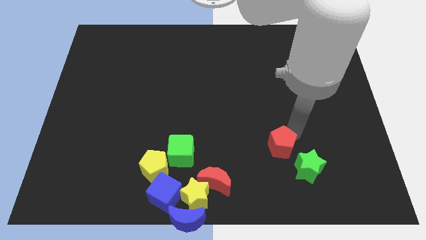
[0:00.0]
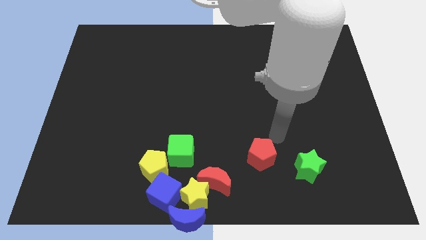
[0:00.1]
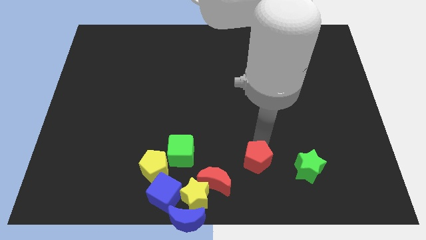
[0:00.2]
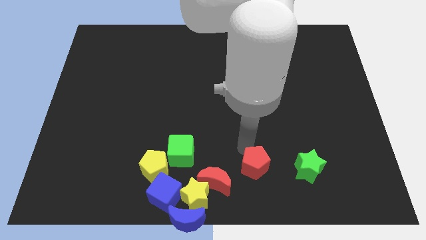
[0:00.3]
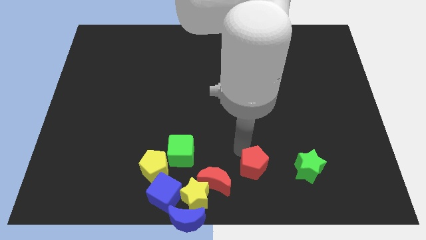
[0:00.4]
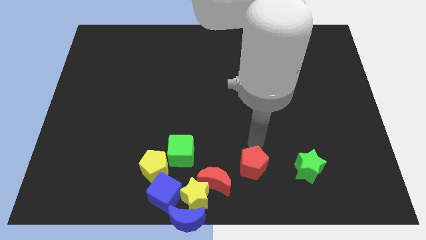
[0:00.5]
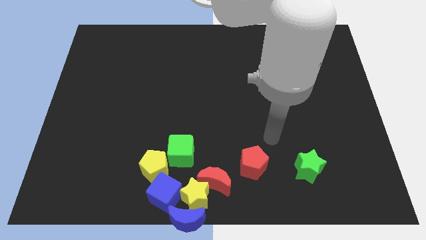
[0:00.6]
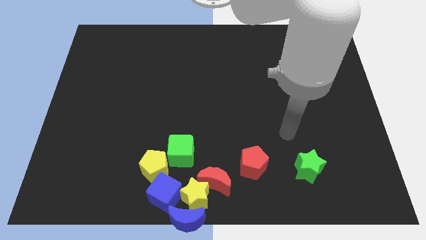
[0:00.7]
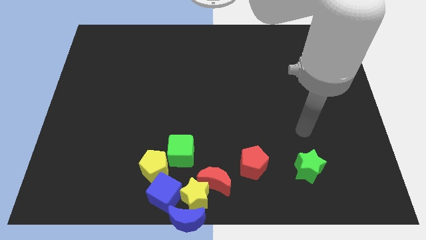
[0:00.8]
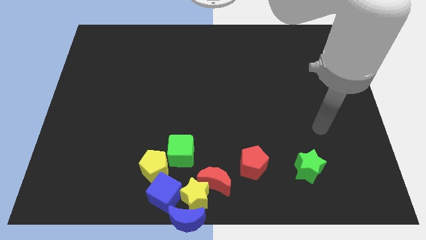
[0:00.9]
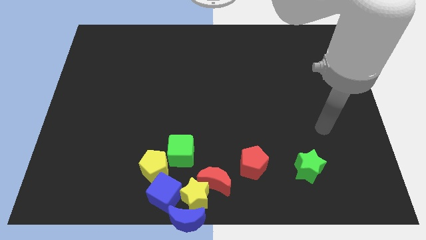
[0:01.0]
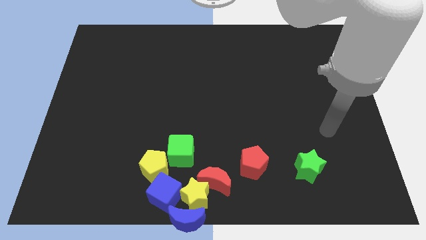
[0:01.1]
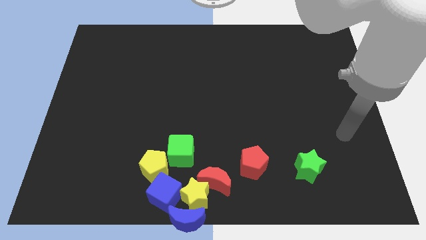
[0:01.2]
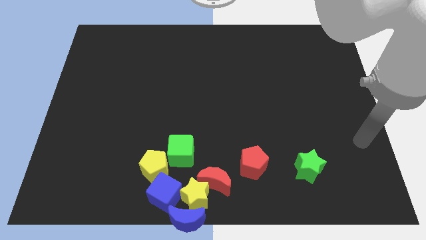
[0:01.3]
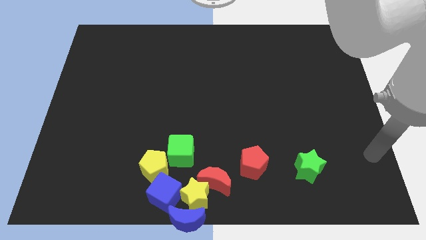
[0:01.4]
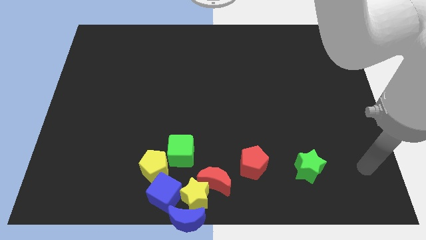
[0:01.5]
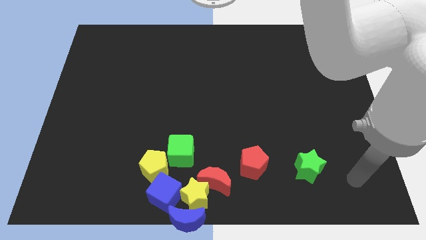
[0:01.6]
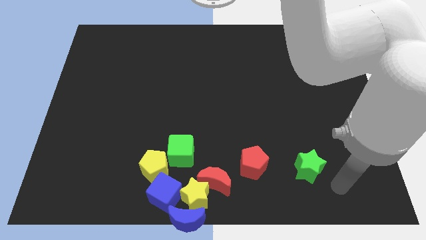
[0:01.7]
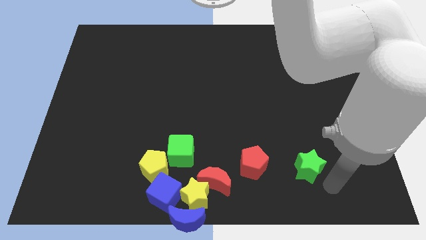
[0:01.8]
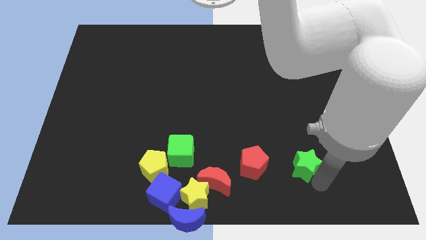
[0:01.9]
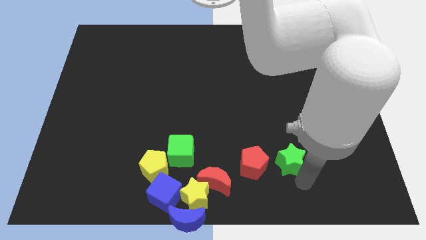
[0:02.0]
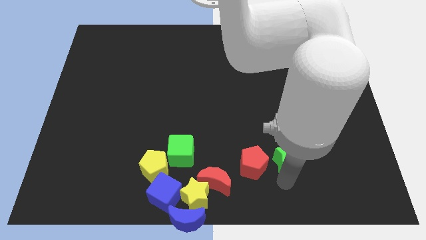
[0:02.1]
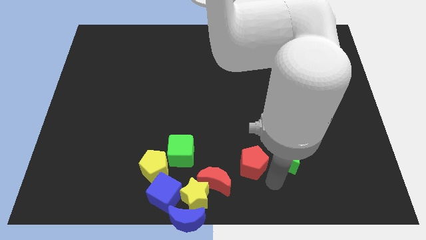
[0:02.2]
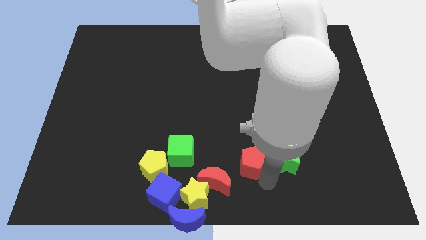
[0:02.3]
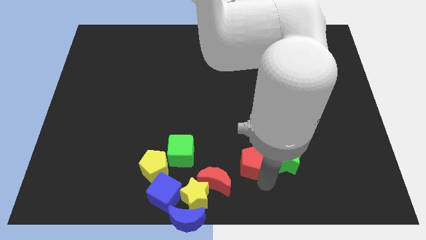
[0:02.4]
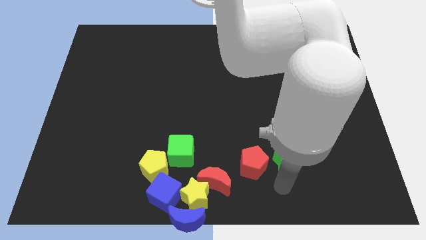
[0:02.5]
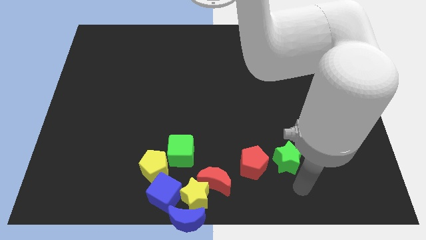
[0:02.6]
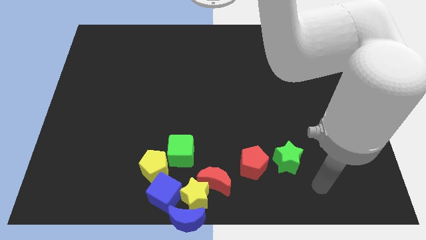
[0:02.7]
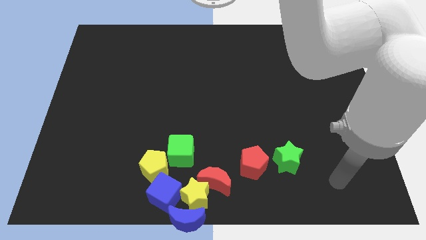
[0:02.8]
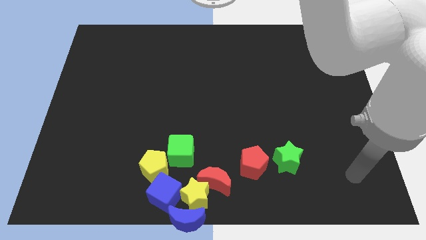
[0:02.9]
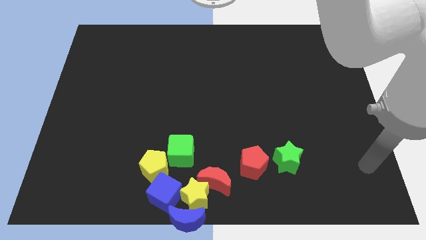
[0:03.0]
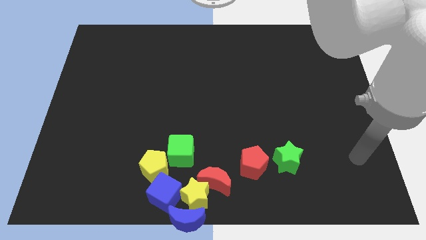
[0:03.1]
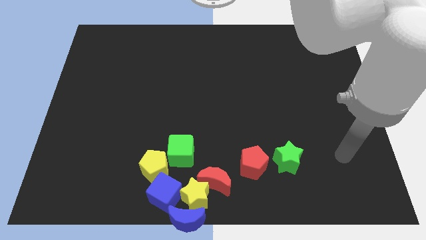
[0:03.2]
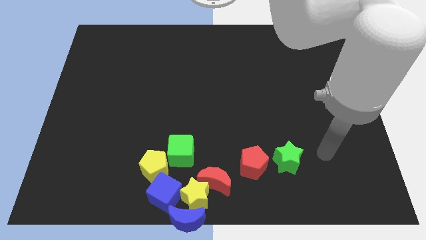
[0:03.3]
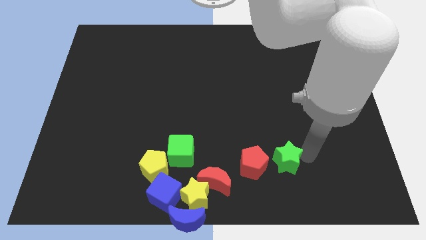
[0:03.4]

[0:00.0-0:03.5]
place the red pentagon near the red crescent

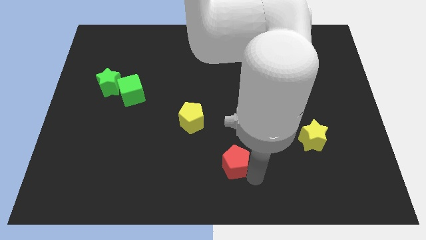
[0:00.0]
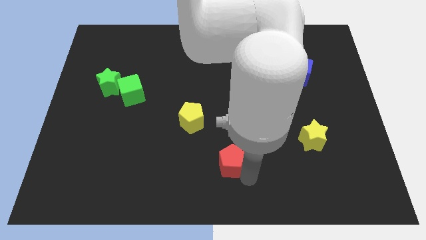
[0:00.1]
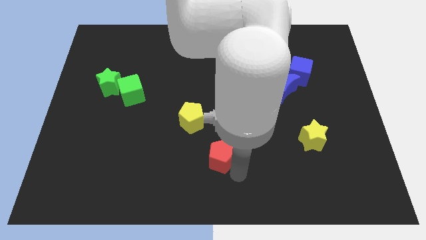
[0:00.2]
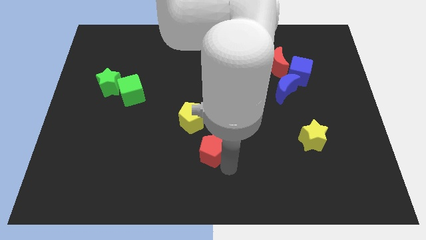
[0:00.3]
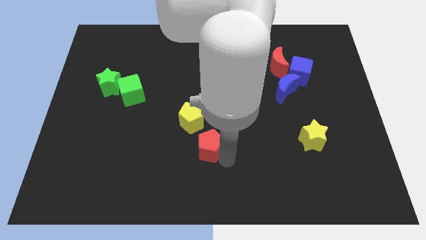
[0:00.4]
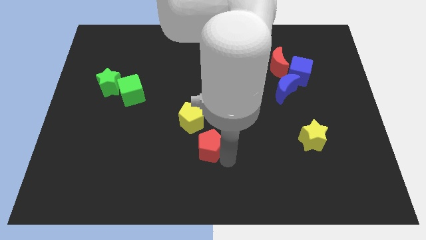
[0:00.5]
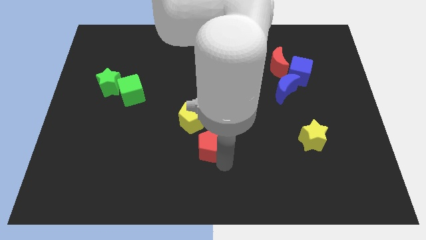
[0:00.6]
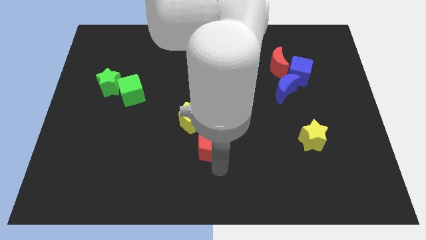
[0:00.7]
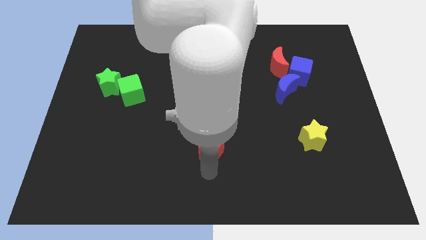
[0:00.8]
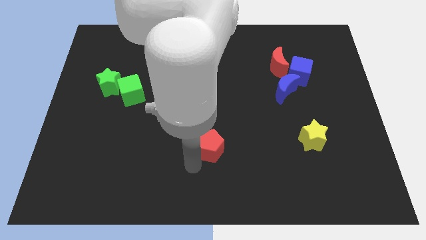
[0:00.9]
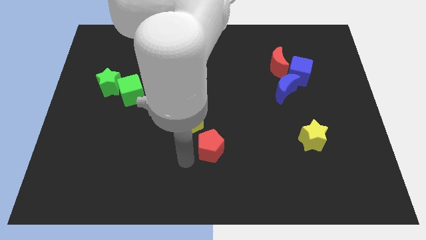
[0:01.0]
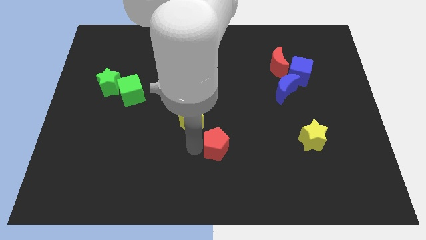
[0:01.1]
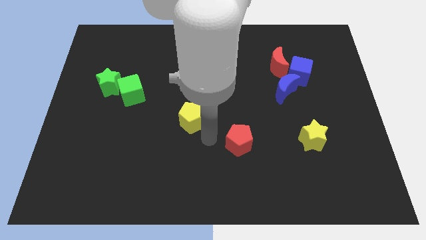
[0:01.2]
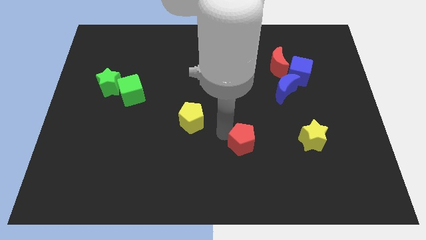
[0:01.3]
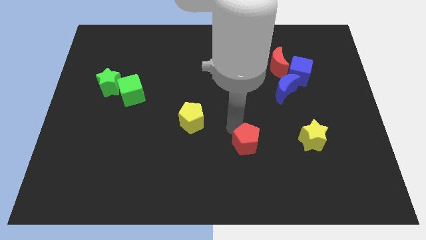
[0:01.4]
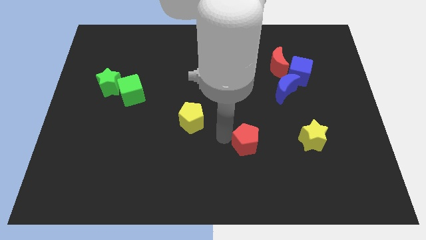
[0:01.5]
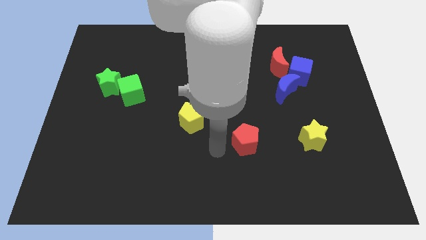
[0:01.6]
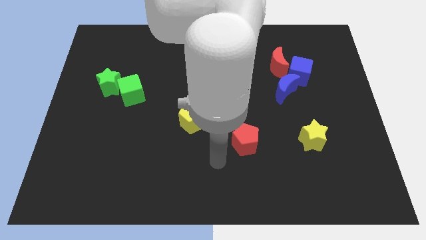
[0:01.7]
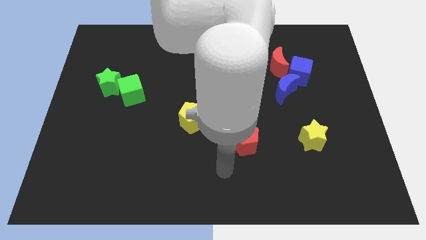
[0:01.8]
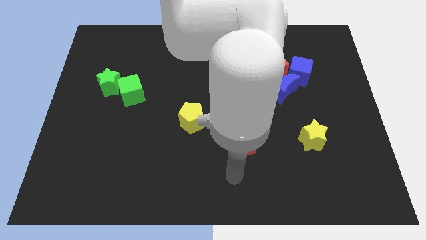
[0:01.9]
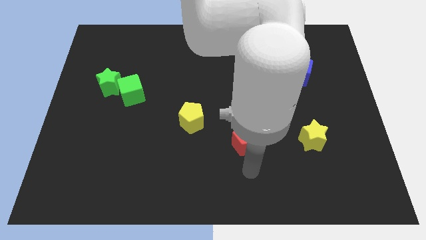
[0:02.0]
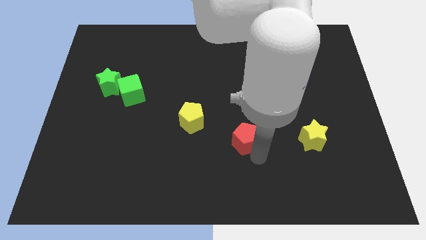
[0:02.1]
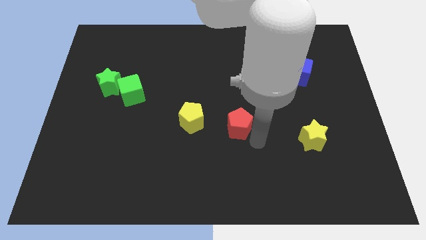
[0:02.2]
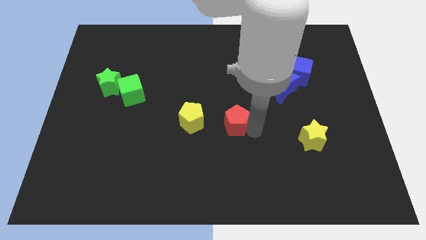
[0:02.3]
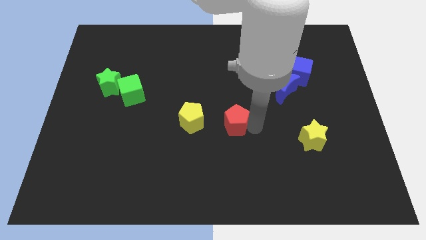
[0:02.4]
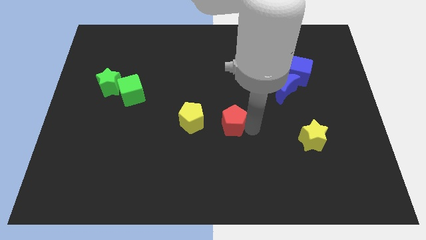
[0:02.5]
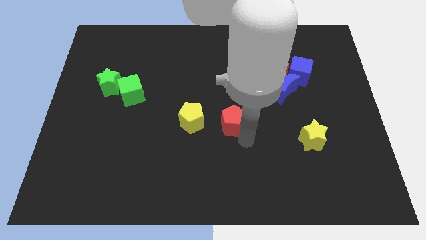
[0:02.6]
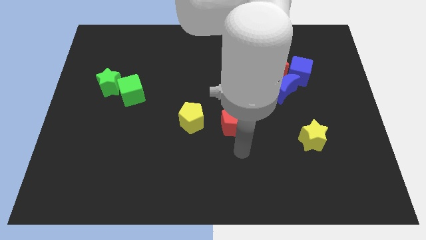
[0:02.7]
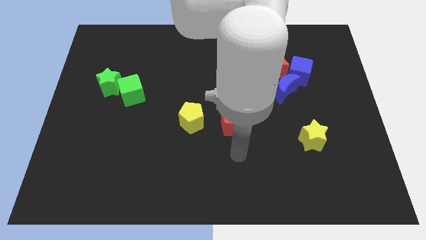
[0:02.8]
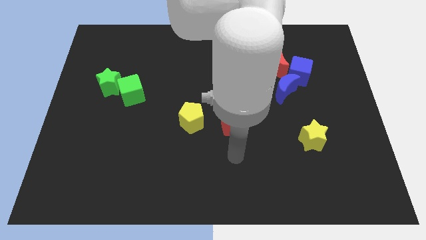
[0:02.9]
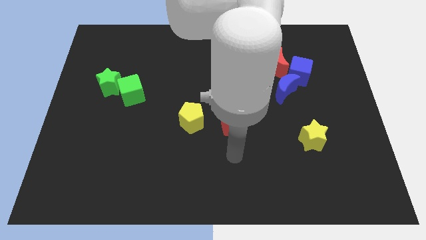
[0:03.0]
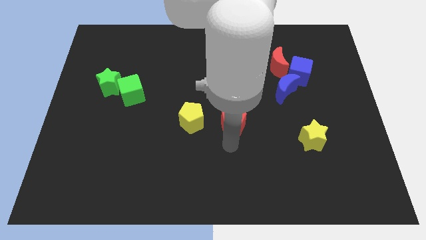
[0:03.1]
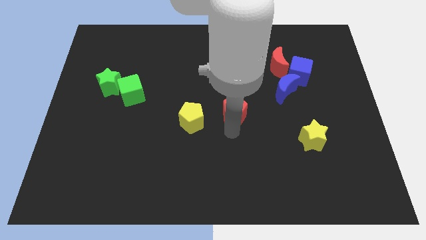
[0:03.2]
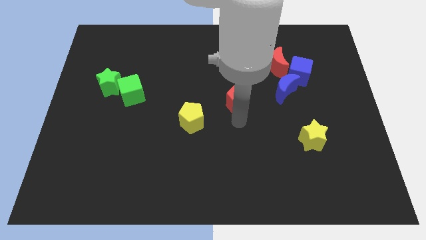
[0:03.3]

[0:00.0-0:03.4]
place red pentagon to the right of yellow pentagon

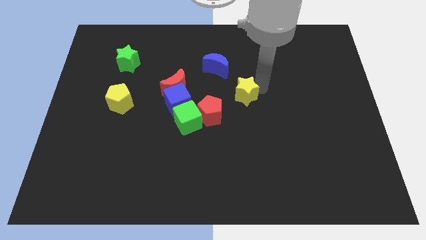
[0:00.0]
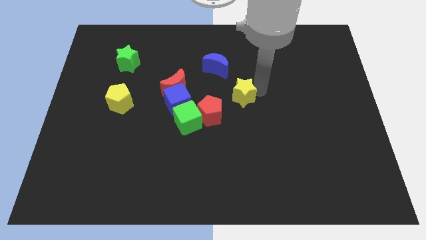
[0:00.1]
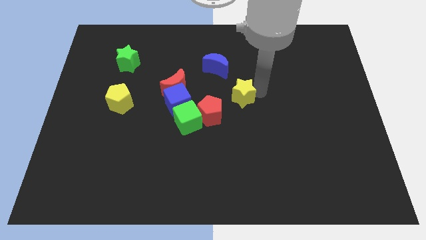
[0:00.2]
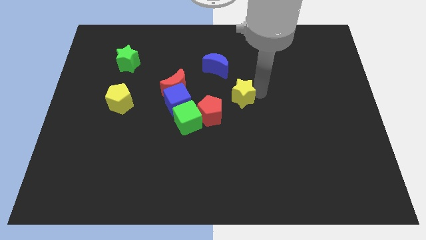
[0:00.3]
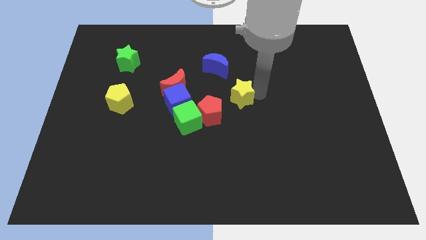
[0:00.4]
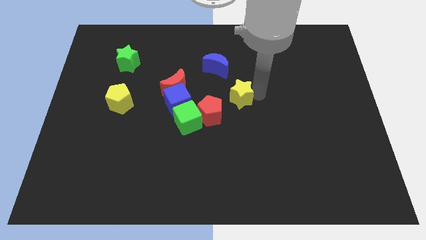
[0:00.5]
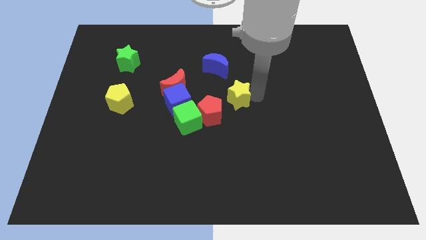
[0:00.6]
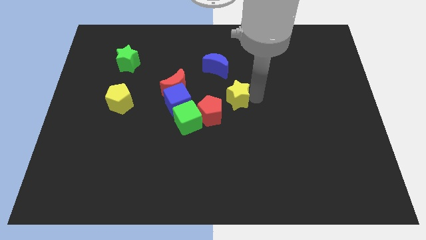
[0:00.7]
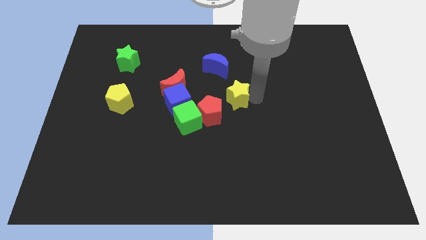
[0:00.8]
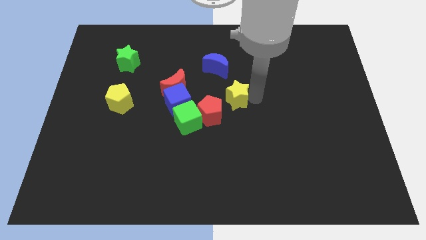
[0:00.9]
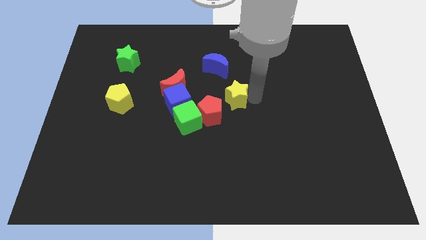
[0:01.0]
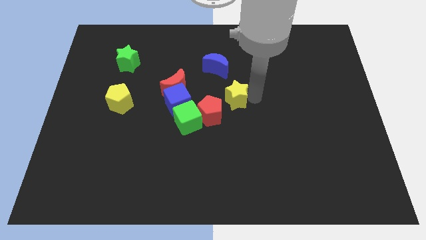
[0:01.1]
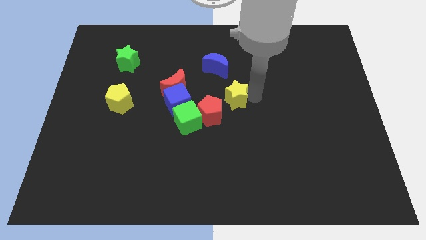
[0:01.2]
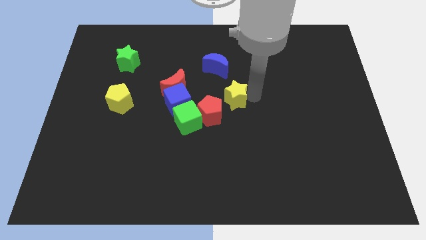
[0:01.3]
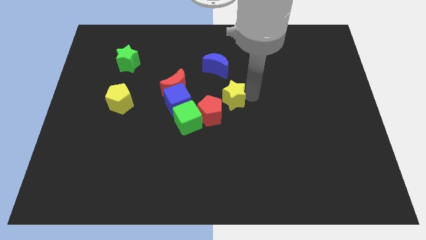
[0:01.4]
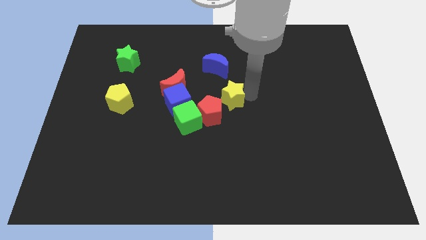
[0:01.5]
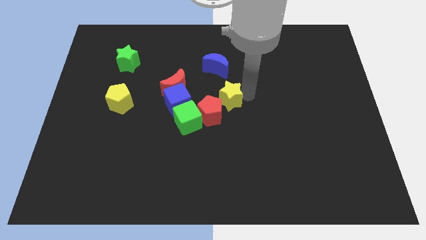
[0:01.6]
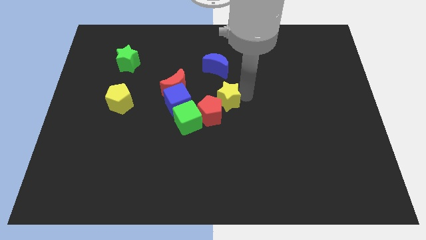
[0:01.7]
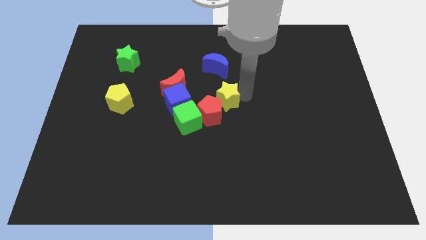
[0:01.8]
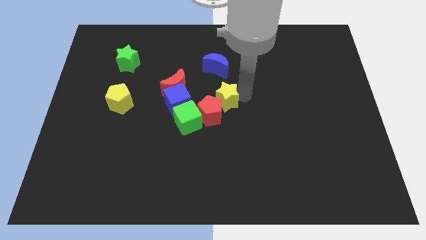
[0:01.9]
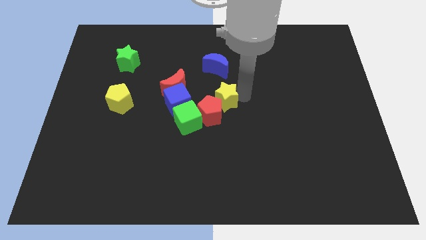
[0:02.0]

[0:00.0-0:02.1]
move the yellow star into the red pentagon

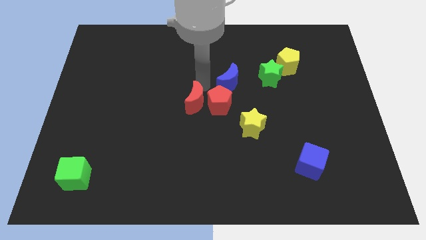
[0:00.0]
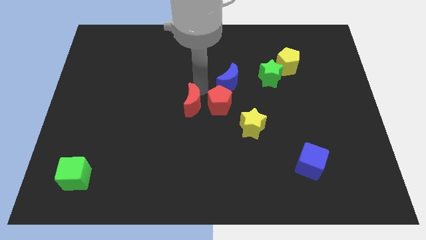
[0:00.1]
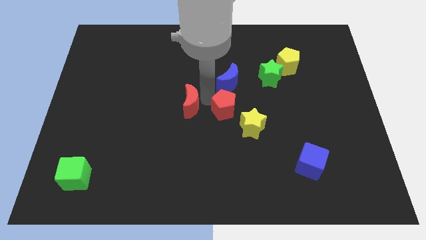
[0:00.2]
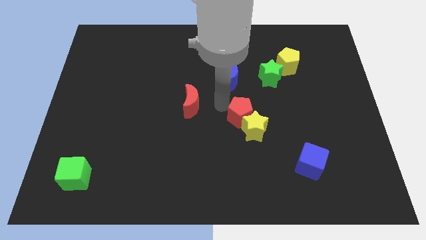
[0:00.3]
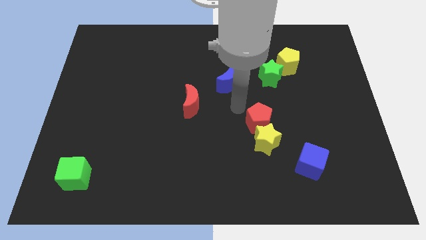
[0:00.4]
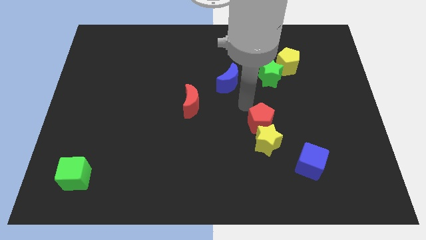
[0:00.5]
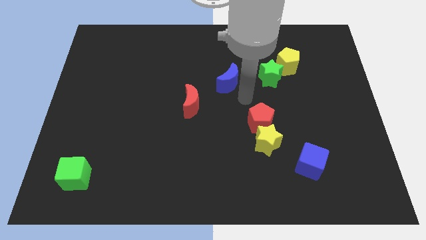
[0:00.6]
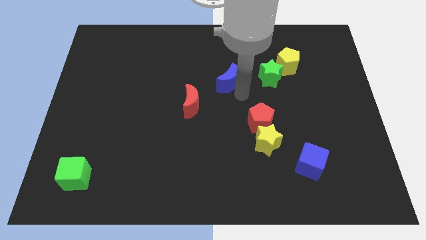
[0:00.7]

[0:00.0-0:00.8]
push the red pentagon into the yellow star
